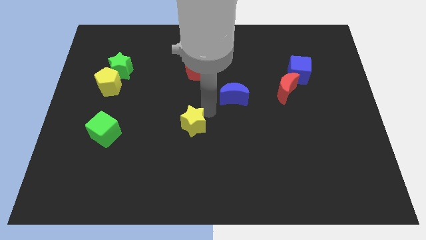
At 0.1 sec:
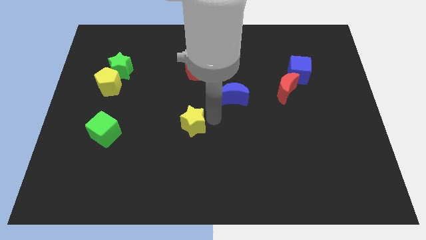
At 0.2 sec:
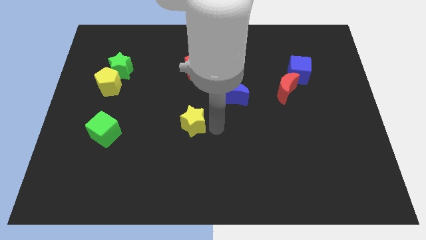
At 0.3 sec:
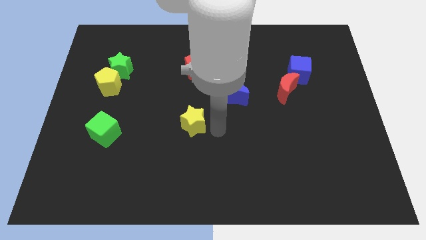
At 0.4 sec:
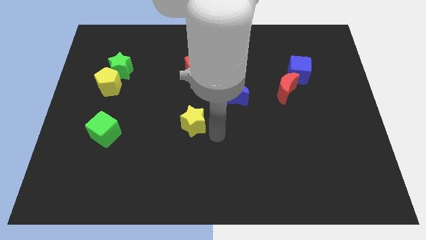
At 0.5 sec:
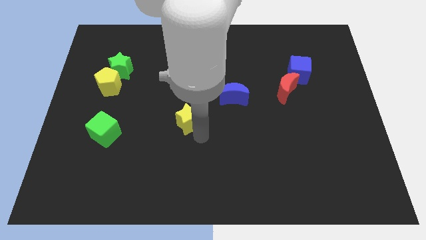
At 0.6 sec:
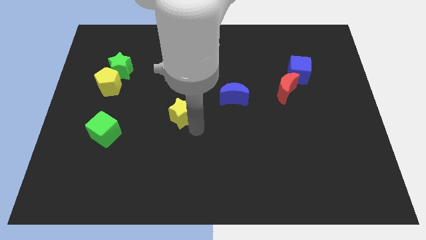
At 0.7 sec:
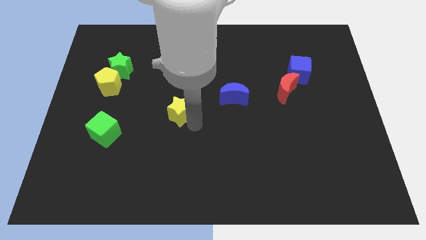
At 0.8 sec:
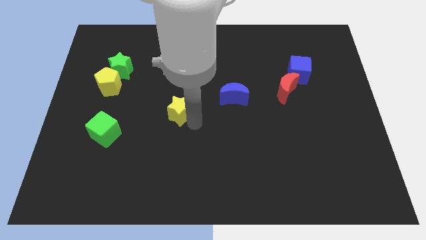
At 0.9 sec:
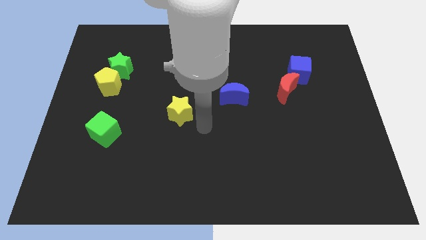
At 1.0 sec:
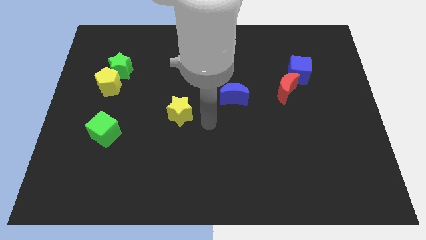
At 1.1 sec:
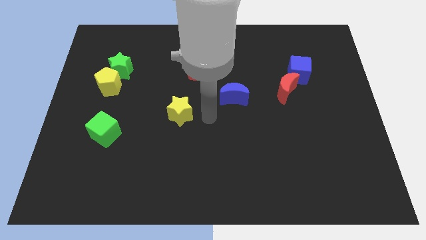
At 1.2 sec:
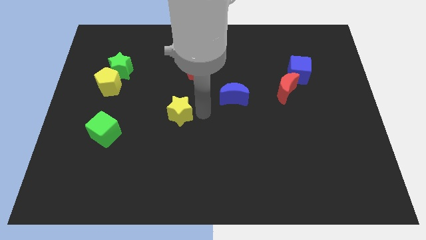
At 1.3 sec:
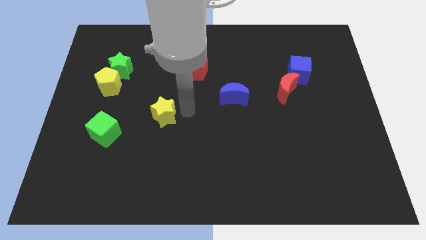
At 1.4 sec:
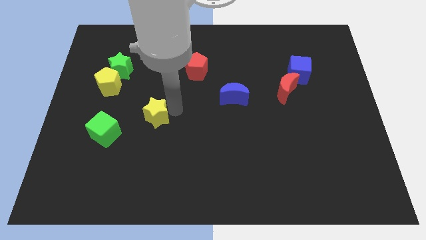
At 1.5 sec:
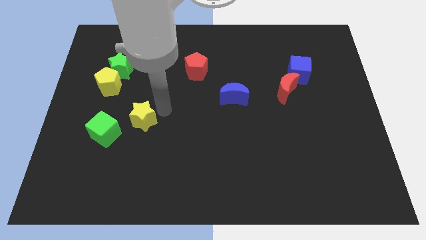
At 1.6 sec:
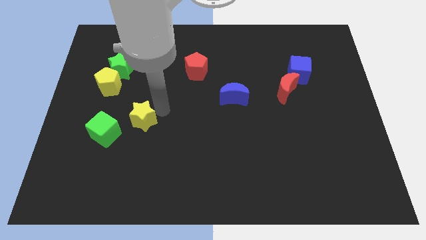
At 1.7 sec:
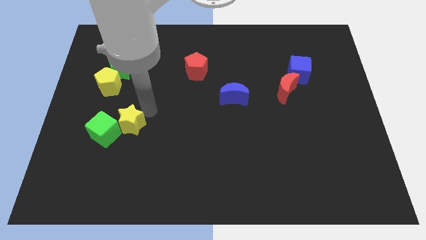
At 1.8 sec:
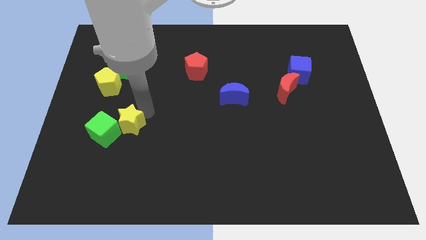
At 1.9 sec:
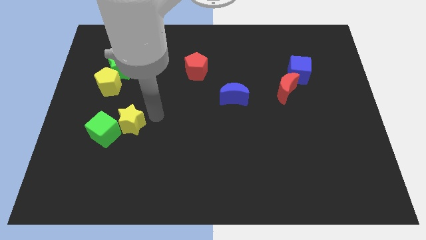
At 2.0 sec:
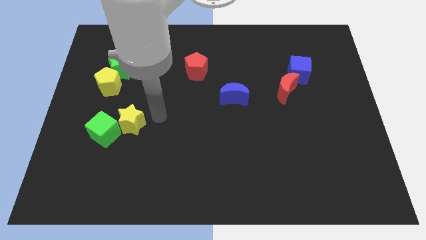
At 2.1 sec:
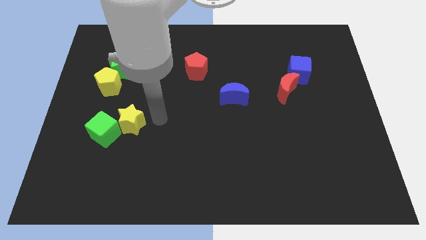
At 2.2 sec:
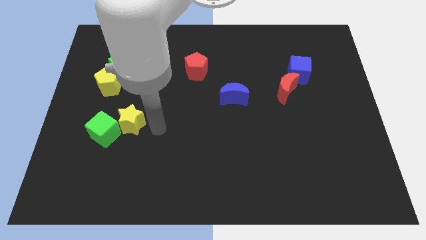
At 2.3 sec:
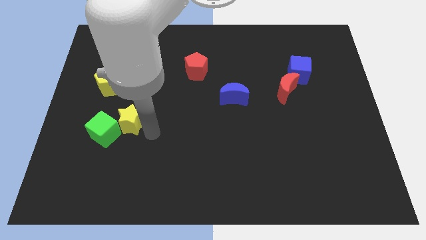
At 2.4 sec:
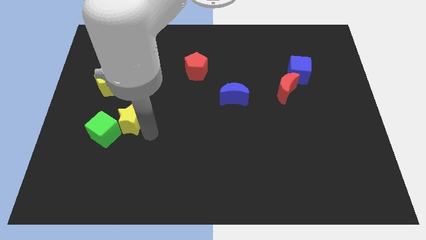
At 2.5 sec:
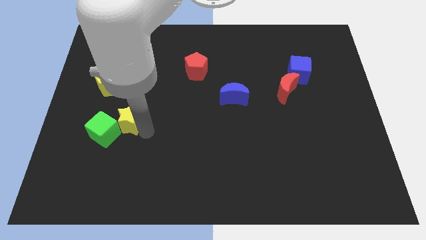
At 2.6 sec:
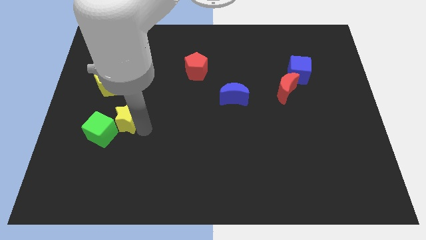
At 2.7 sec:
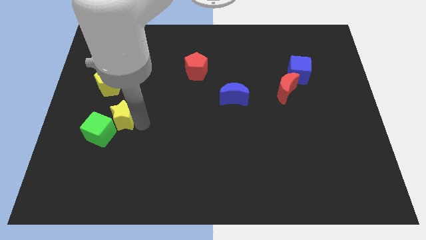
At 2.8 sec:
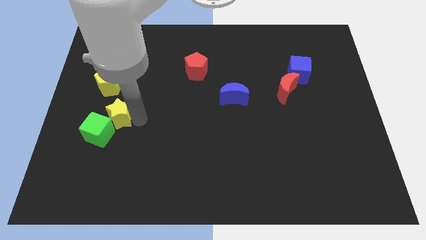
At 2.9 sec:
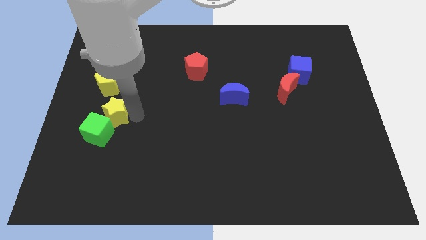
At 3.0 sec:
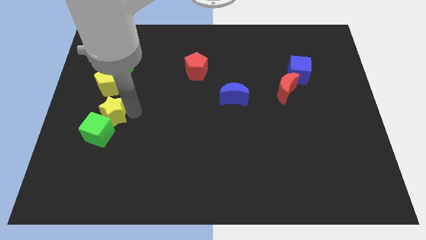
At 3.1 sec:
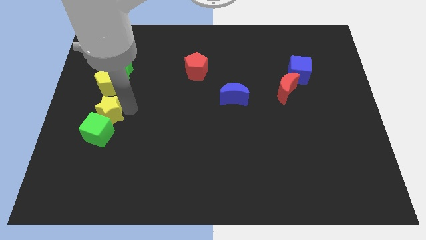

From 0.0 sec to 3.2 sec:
push the yellow star to the left center

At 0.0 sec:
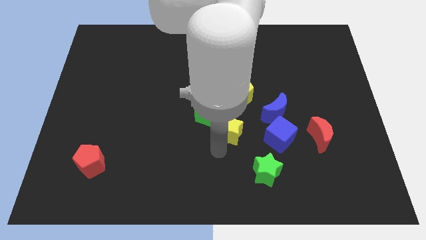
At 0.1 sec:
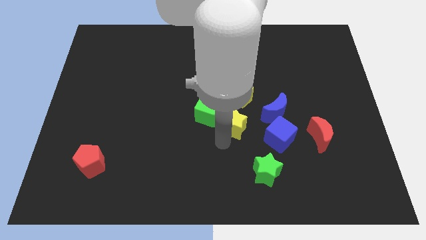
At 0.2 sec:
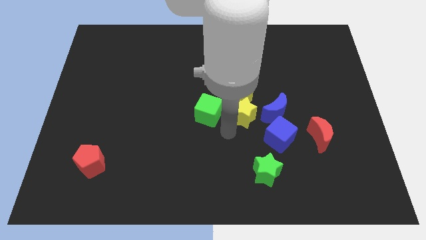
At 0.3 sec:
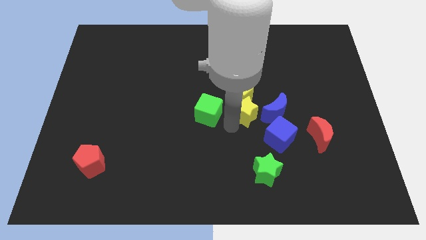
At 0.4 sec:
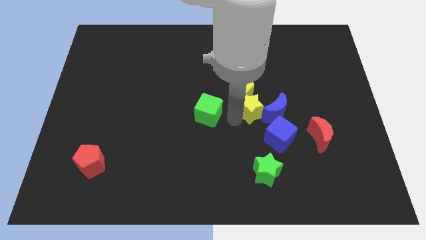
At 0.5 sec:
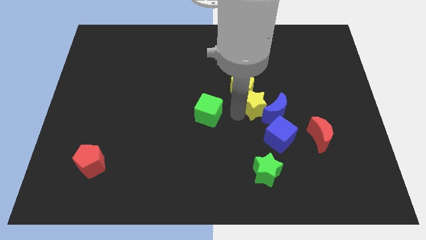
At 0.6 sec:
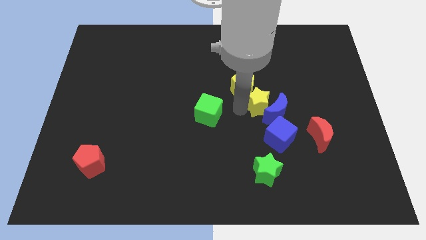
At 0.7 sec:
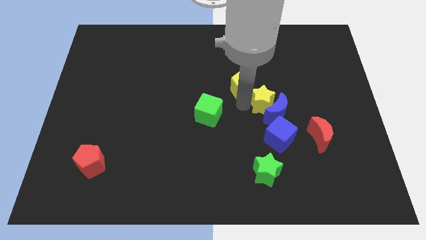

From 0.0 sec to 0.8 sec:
place the yellow star in between the yellow pentagon and blue moon

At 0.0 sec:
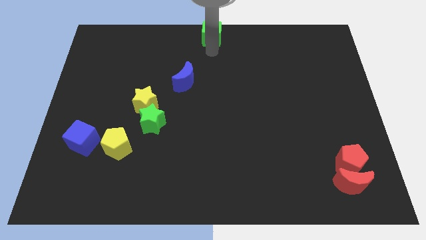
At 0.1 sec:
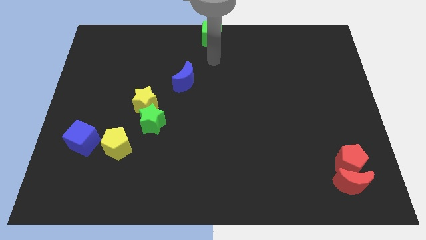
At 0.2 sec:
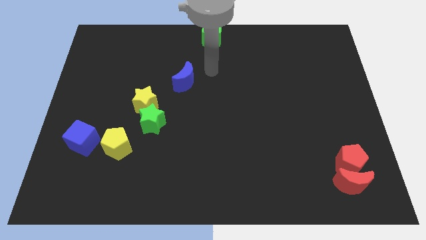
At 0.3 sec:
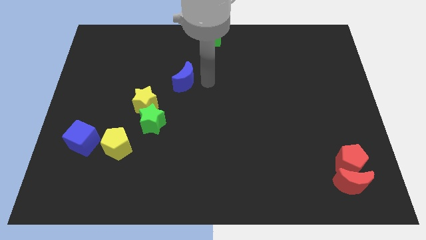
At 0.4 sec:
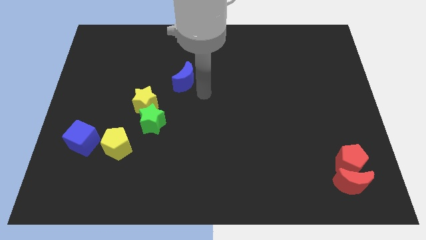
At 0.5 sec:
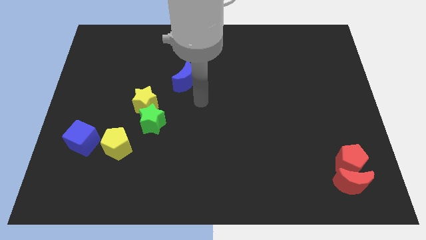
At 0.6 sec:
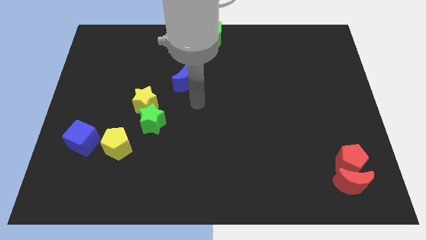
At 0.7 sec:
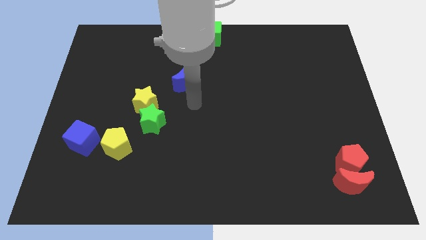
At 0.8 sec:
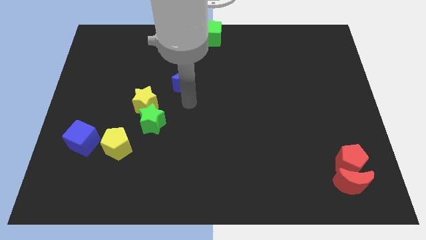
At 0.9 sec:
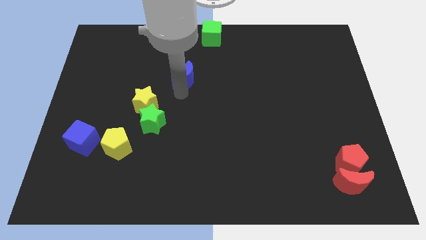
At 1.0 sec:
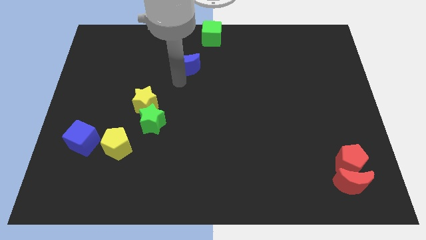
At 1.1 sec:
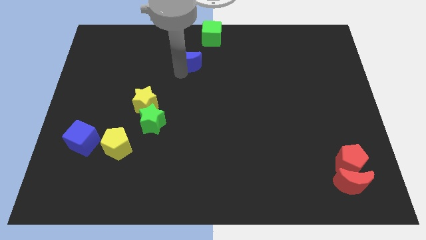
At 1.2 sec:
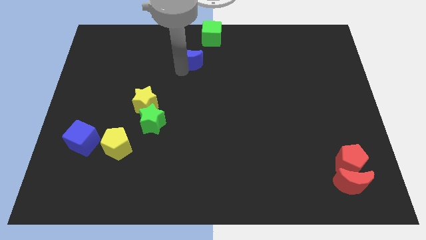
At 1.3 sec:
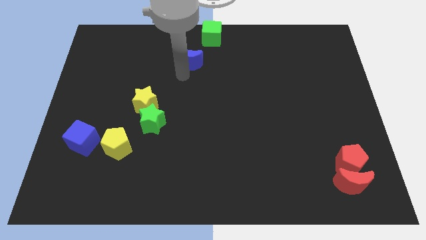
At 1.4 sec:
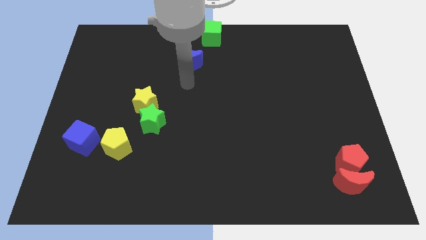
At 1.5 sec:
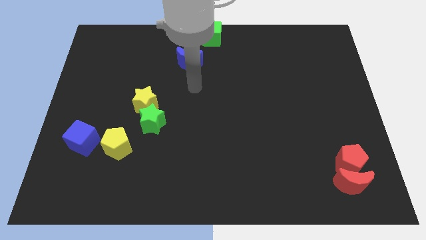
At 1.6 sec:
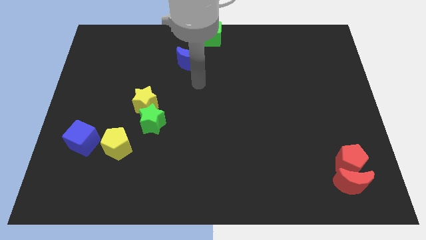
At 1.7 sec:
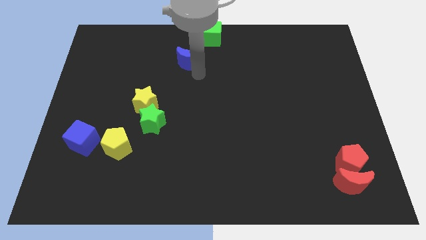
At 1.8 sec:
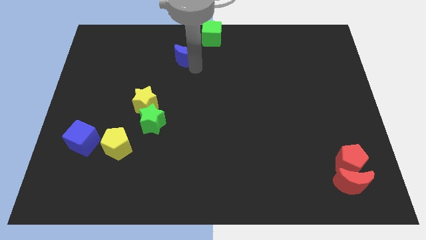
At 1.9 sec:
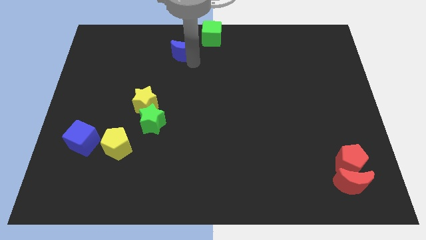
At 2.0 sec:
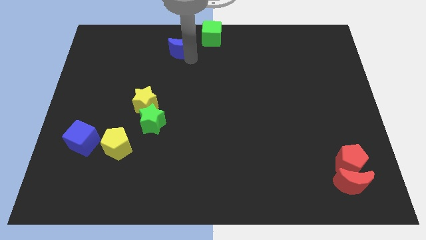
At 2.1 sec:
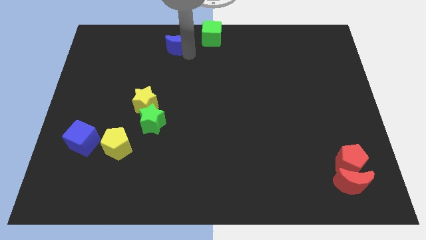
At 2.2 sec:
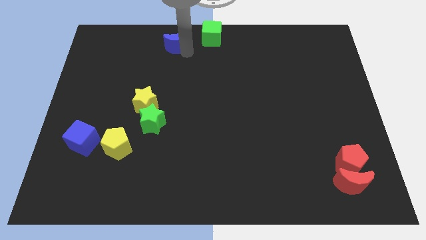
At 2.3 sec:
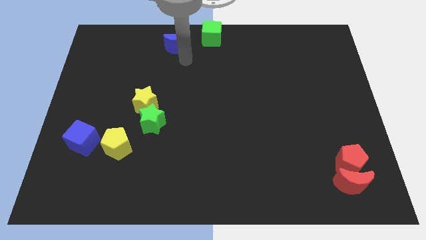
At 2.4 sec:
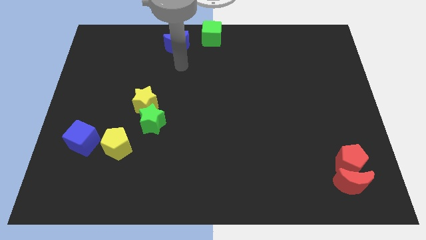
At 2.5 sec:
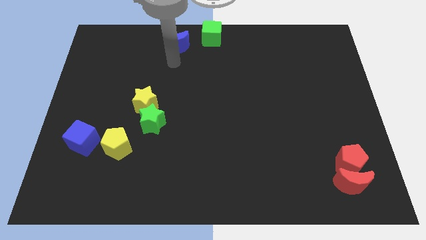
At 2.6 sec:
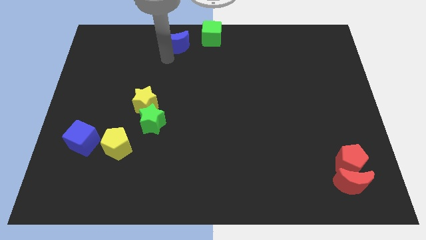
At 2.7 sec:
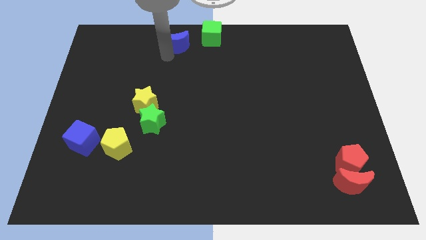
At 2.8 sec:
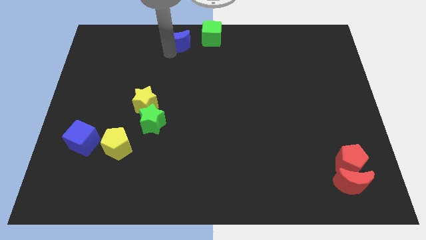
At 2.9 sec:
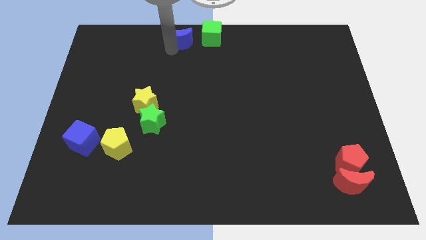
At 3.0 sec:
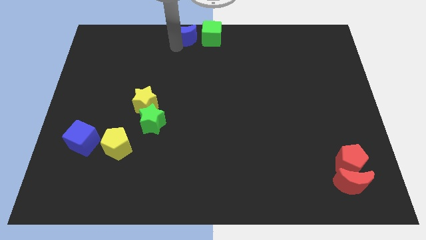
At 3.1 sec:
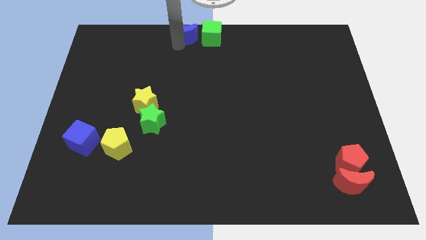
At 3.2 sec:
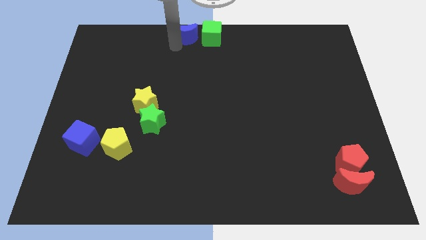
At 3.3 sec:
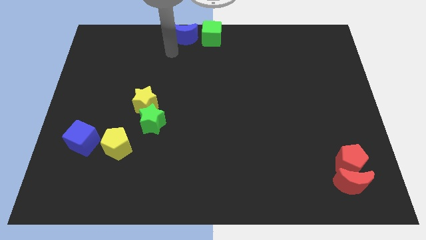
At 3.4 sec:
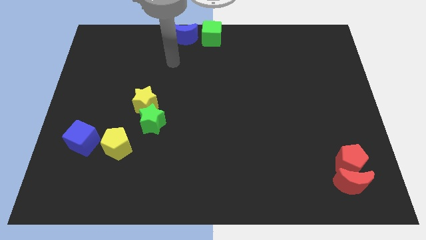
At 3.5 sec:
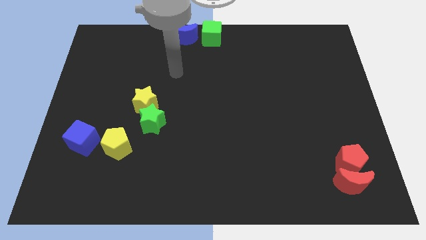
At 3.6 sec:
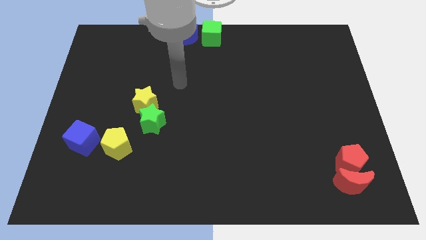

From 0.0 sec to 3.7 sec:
put the blue crescent to the left of the green cube

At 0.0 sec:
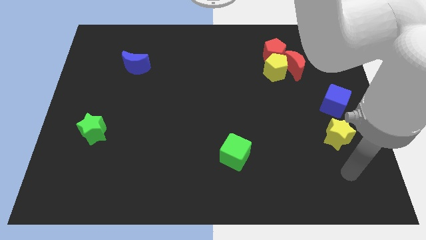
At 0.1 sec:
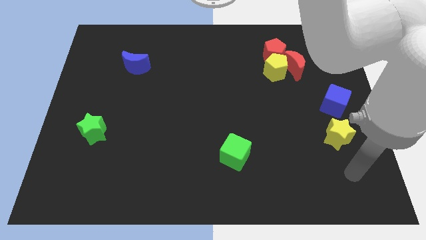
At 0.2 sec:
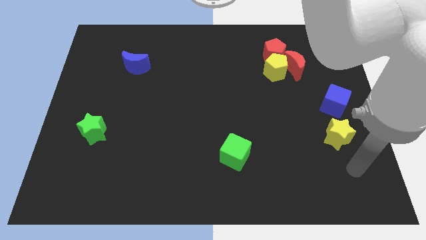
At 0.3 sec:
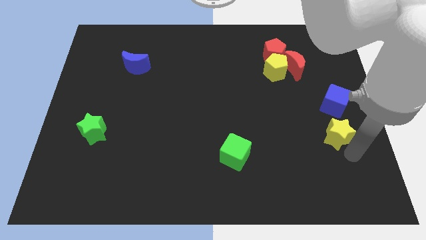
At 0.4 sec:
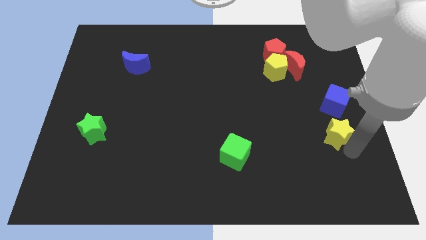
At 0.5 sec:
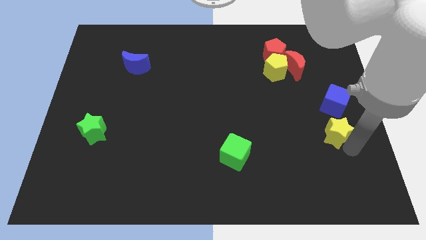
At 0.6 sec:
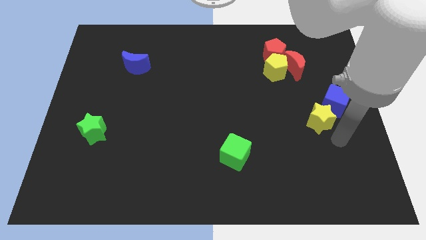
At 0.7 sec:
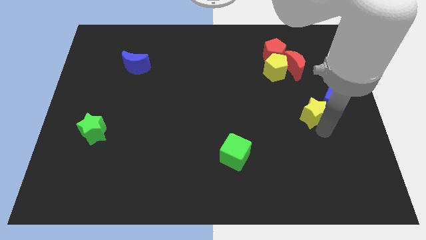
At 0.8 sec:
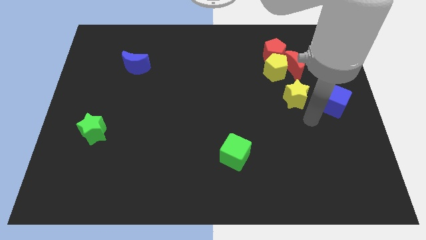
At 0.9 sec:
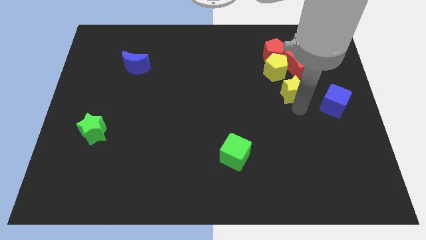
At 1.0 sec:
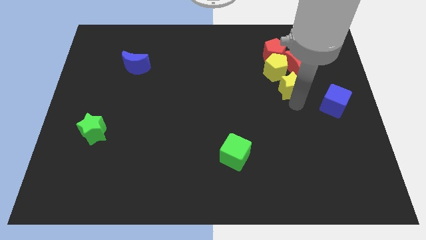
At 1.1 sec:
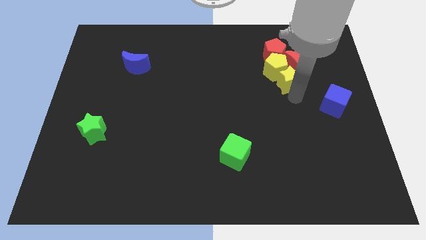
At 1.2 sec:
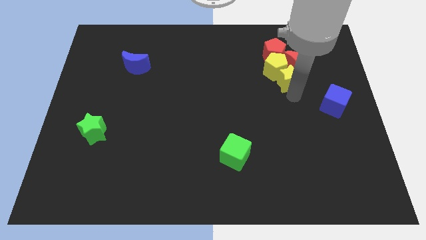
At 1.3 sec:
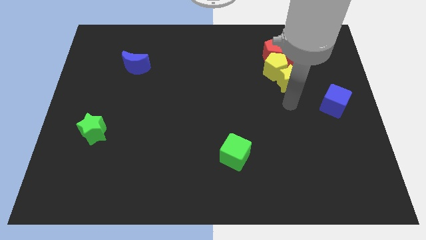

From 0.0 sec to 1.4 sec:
move the yellow star near to the yellow red pentagon and red moon
